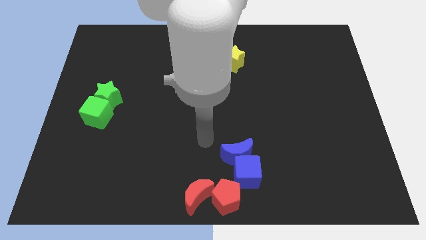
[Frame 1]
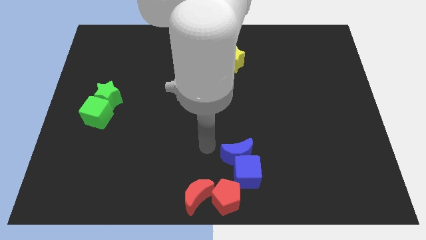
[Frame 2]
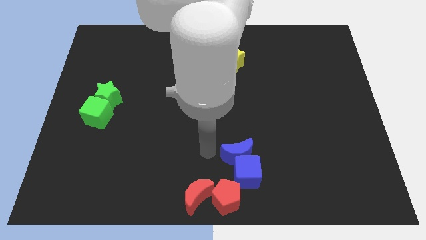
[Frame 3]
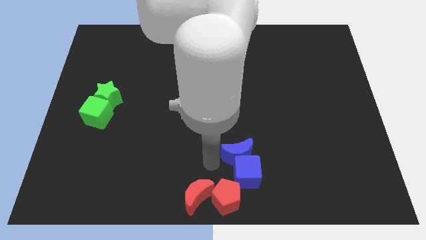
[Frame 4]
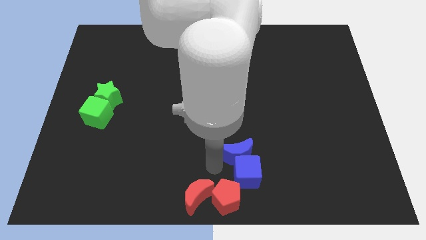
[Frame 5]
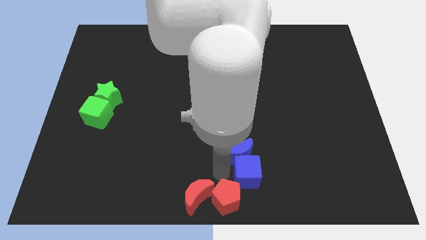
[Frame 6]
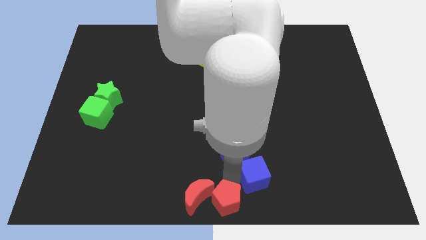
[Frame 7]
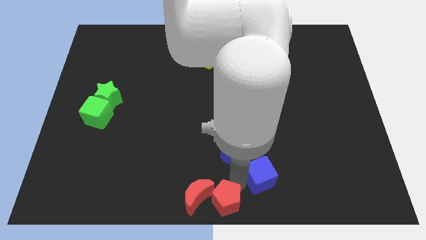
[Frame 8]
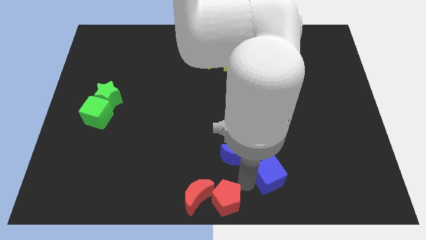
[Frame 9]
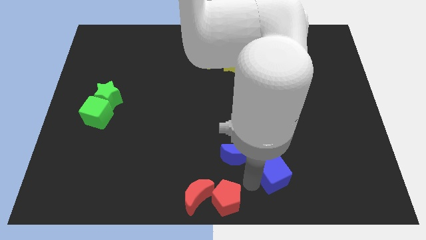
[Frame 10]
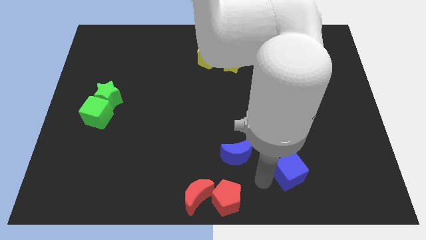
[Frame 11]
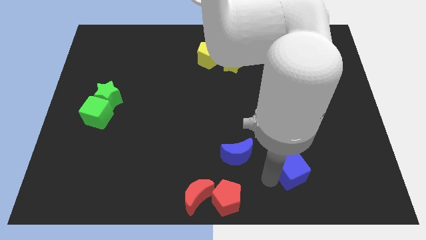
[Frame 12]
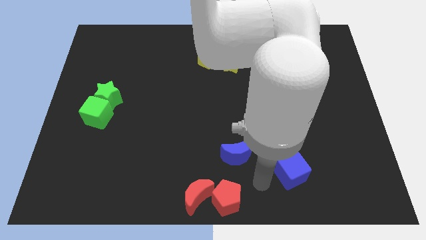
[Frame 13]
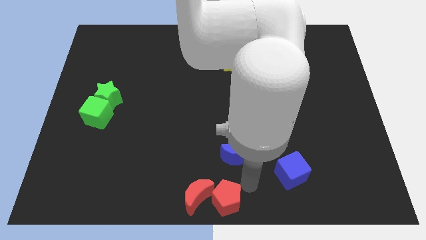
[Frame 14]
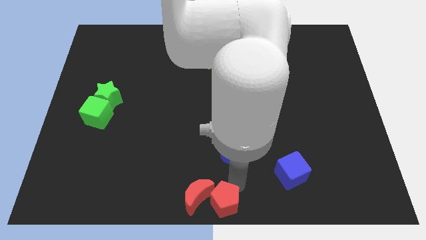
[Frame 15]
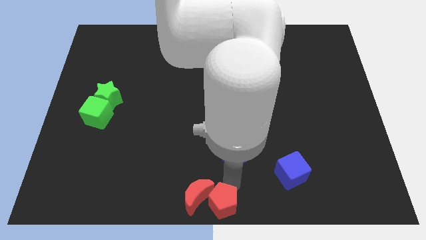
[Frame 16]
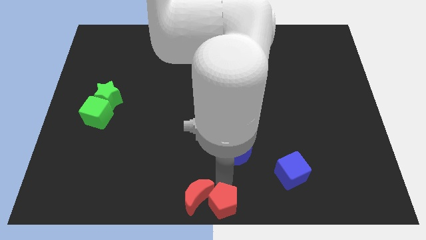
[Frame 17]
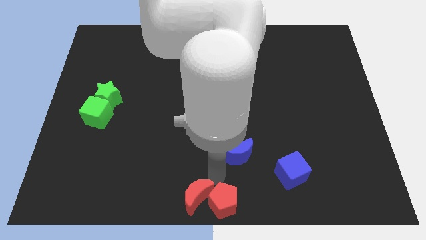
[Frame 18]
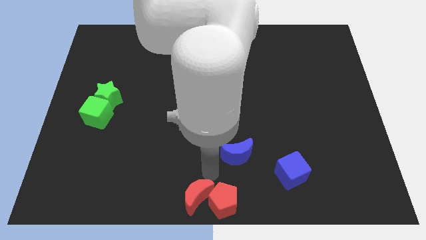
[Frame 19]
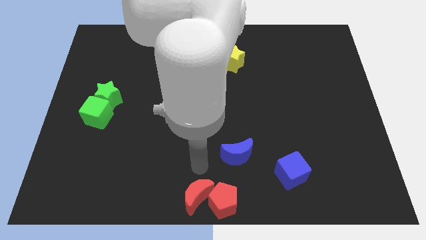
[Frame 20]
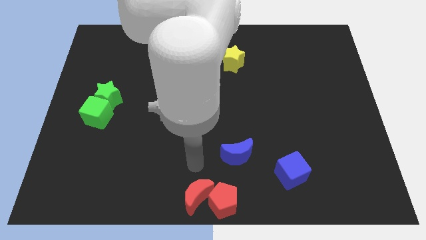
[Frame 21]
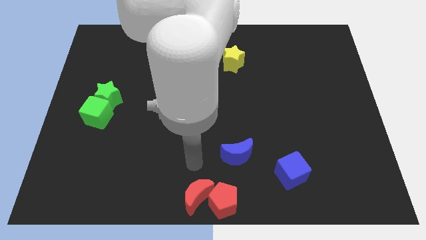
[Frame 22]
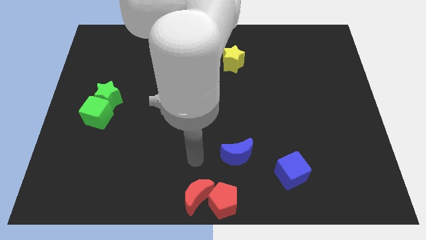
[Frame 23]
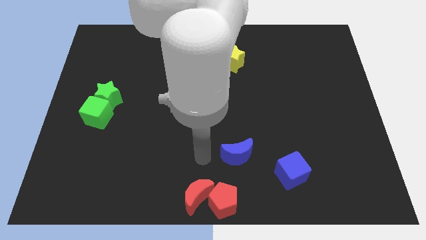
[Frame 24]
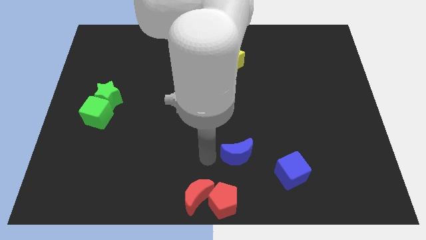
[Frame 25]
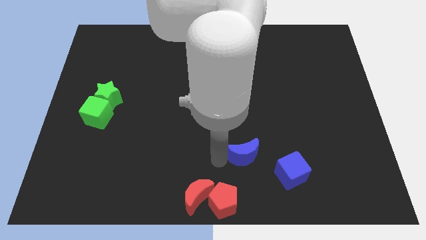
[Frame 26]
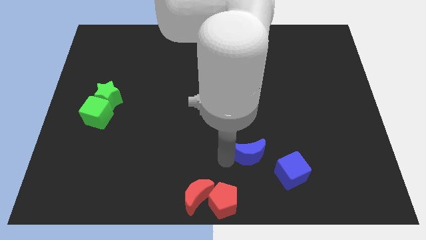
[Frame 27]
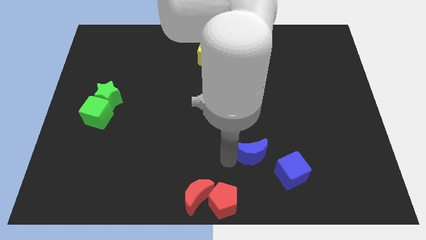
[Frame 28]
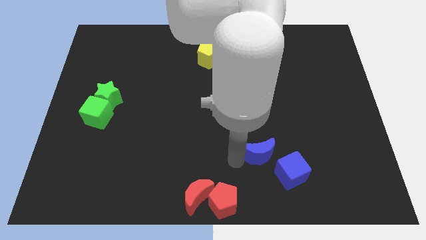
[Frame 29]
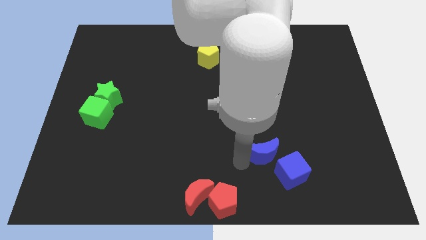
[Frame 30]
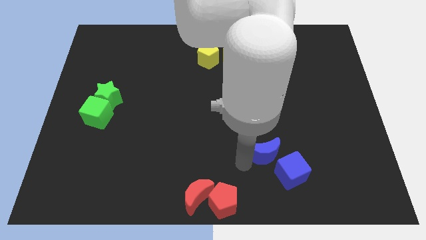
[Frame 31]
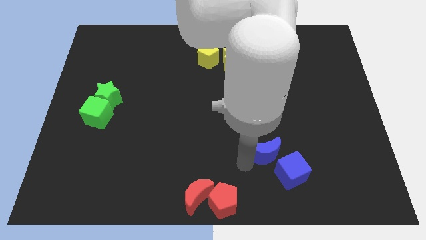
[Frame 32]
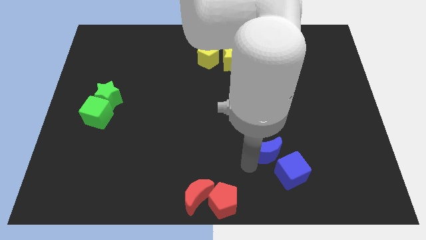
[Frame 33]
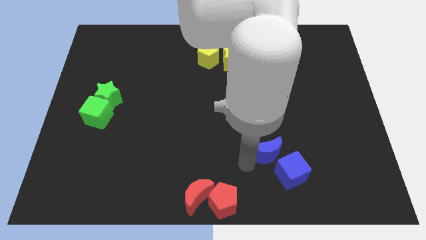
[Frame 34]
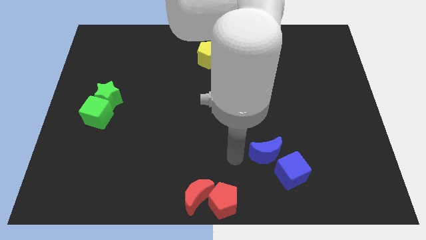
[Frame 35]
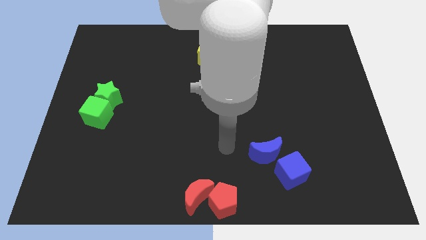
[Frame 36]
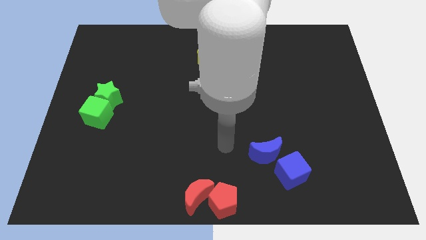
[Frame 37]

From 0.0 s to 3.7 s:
separate blue blocks away from red blocks

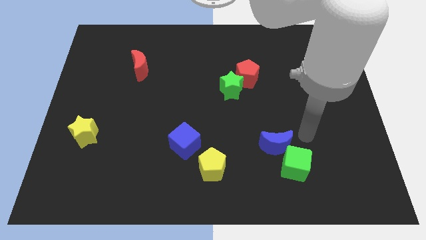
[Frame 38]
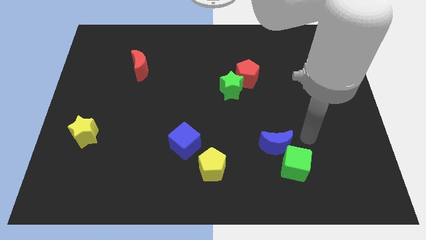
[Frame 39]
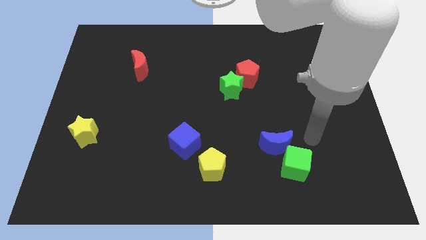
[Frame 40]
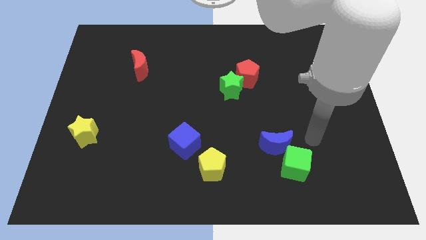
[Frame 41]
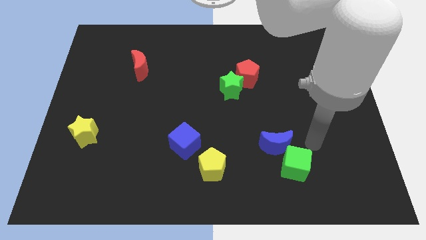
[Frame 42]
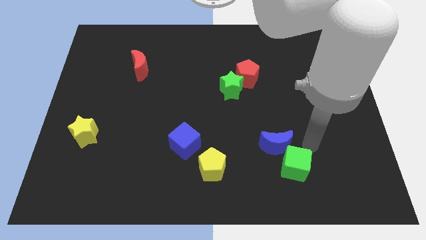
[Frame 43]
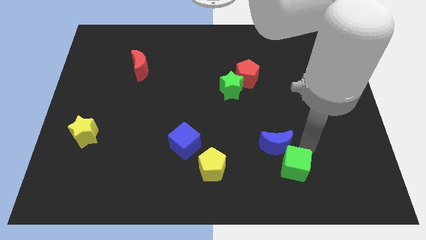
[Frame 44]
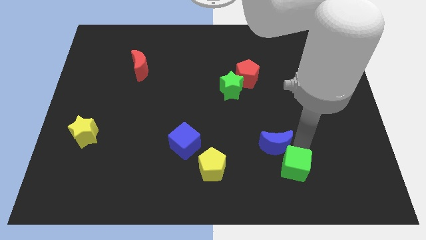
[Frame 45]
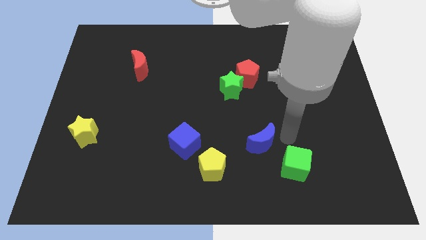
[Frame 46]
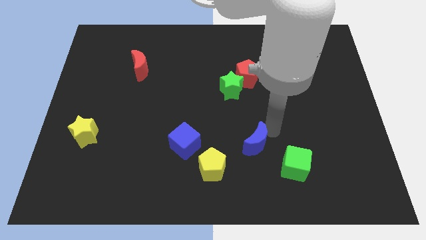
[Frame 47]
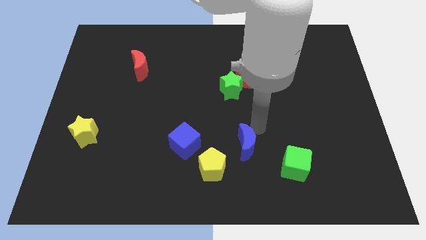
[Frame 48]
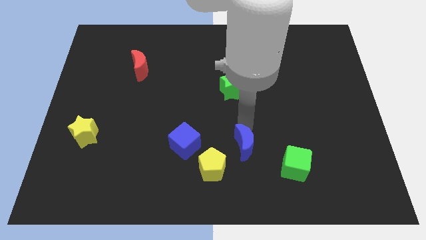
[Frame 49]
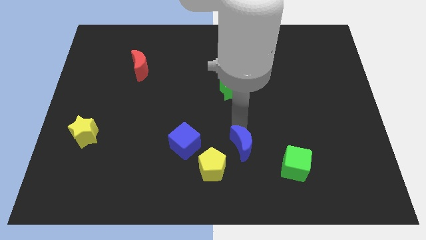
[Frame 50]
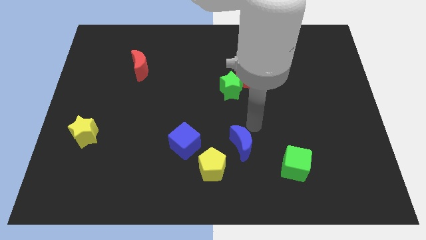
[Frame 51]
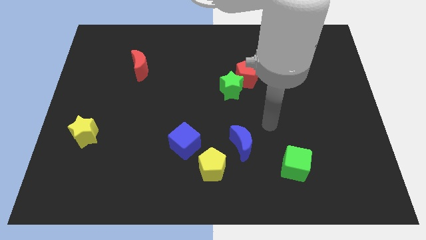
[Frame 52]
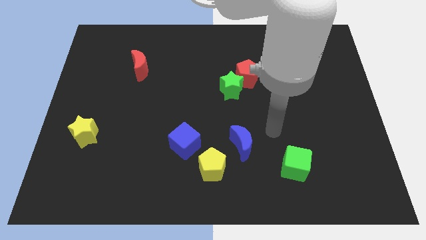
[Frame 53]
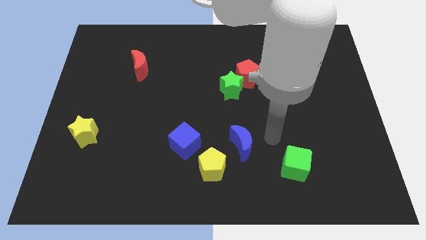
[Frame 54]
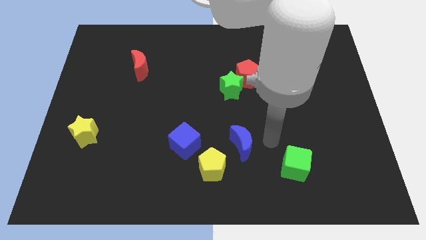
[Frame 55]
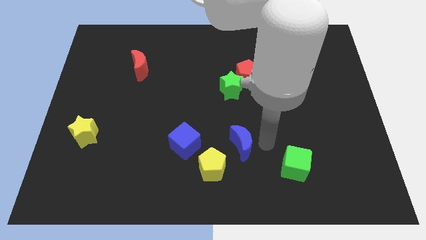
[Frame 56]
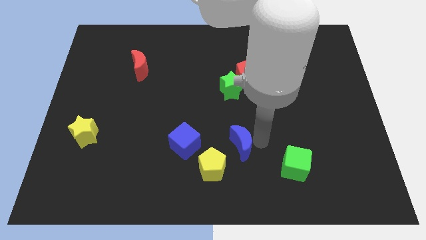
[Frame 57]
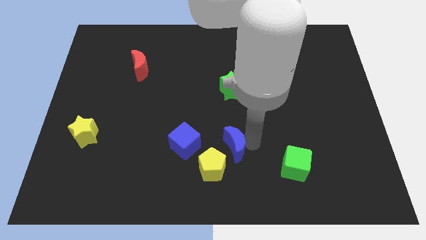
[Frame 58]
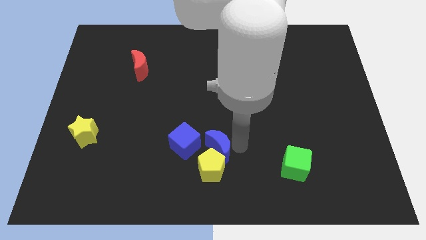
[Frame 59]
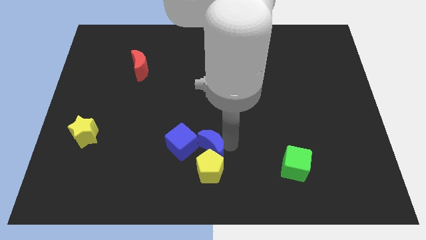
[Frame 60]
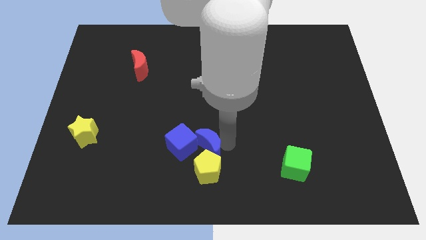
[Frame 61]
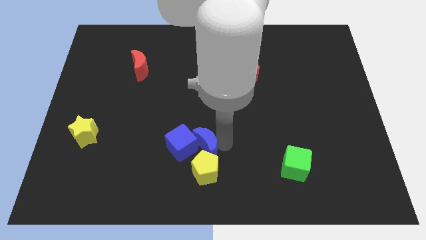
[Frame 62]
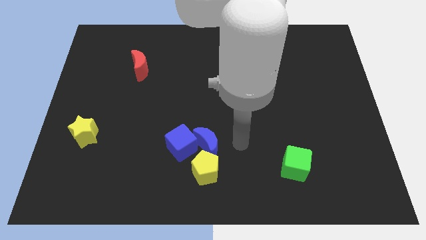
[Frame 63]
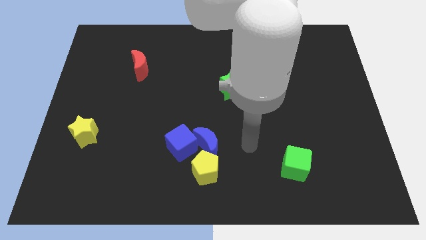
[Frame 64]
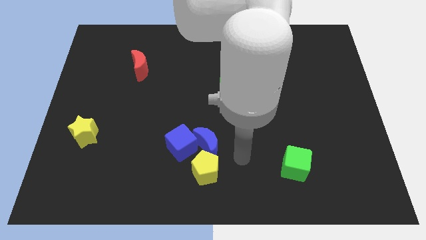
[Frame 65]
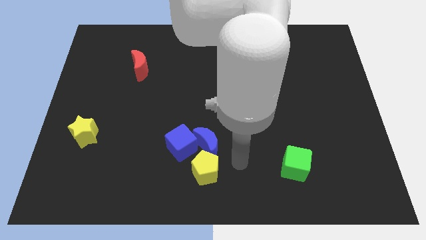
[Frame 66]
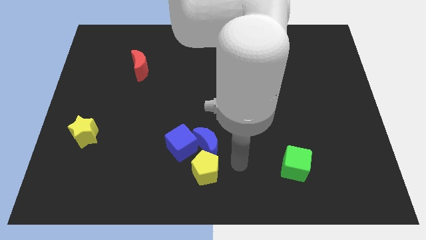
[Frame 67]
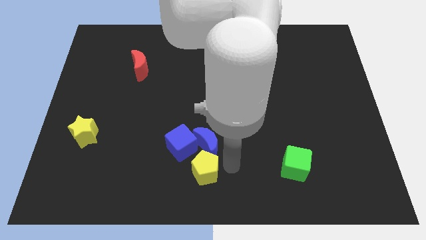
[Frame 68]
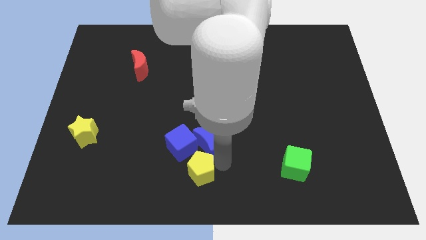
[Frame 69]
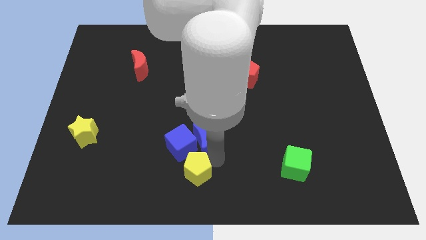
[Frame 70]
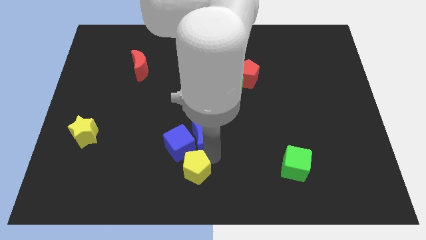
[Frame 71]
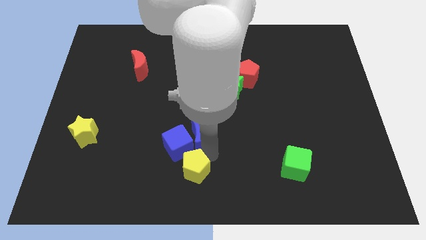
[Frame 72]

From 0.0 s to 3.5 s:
push the blue moon into the blue cube and yellow pentagon

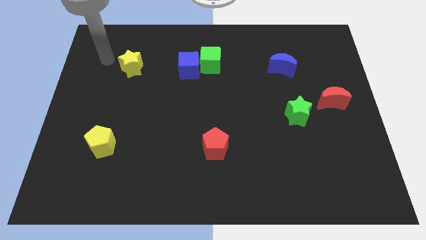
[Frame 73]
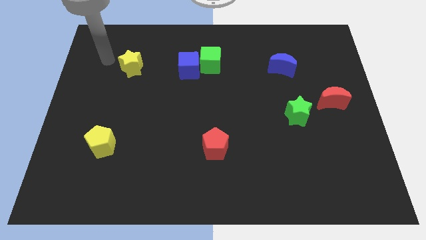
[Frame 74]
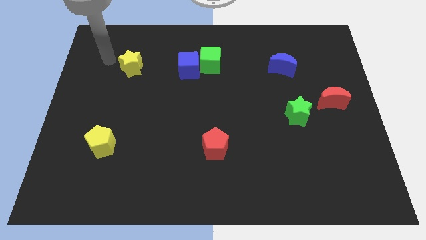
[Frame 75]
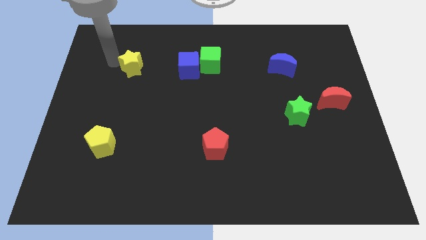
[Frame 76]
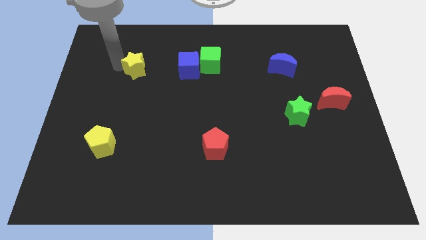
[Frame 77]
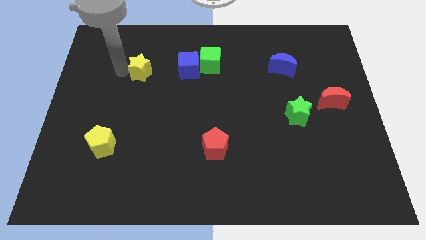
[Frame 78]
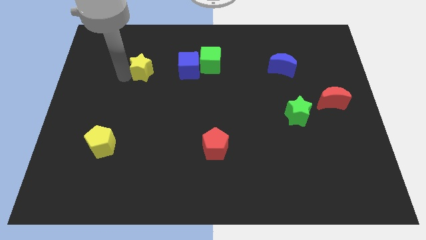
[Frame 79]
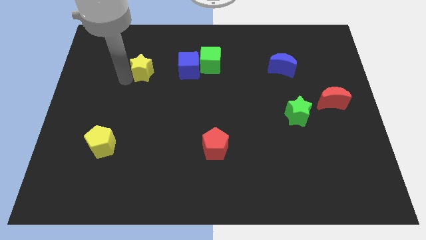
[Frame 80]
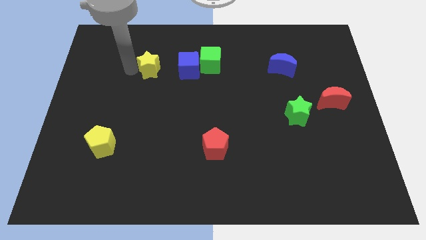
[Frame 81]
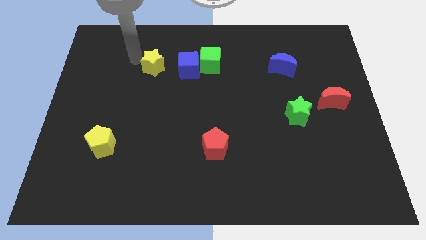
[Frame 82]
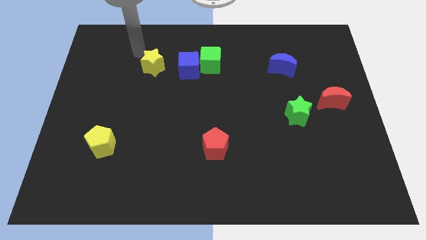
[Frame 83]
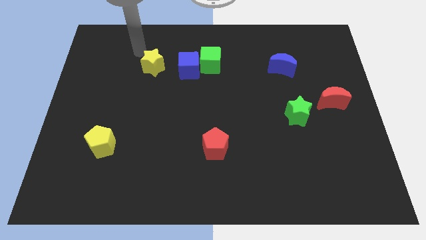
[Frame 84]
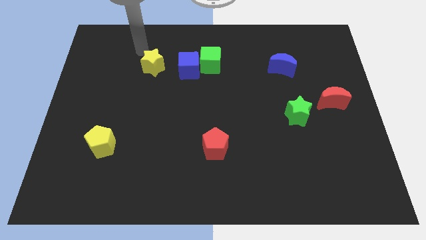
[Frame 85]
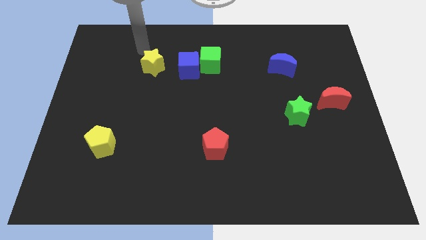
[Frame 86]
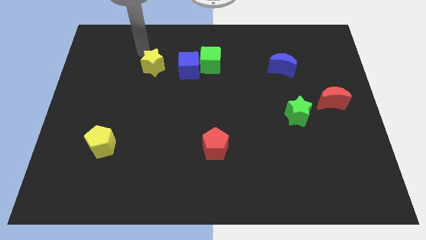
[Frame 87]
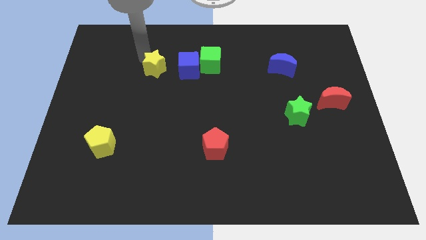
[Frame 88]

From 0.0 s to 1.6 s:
push the yellow star to the left of the blue cube

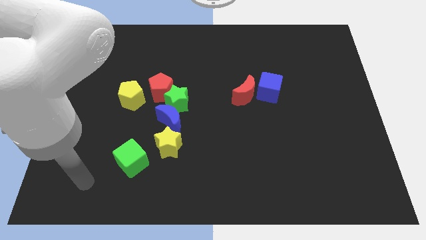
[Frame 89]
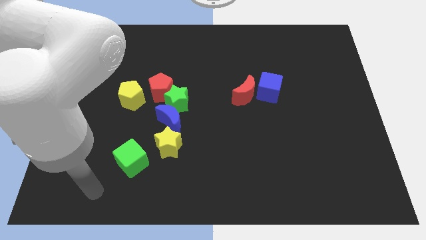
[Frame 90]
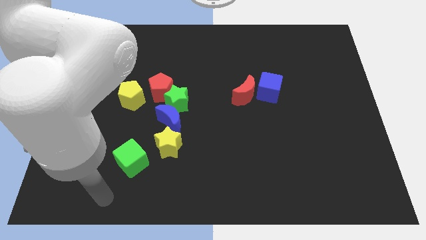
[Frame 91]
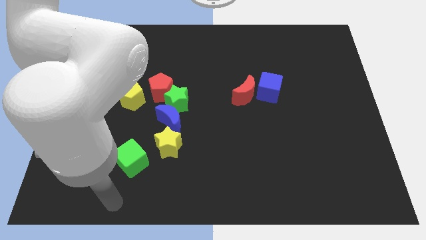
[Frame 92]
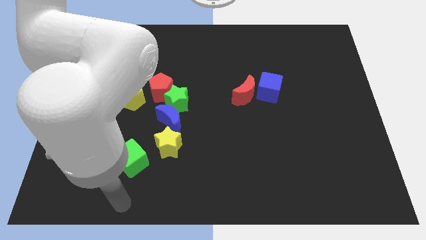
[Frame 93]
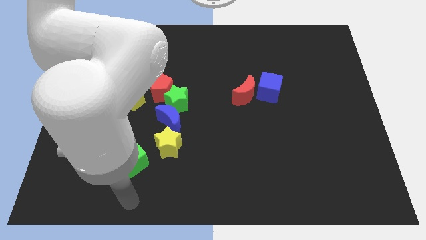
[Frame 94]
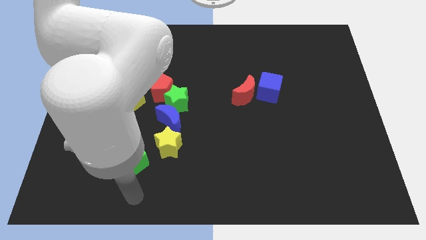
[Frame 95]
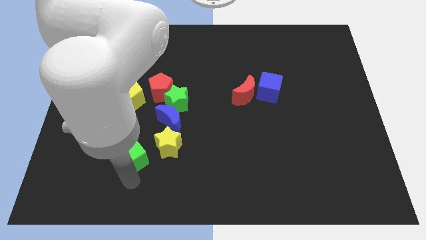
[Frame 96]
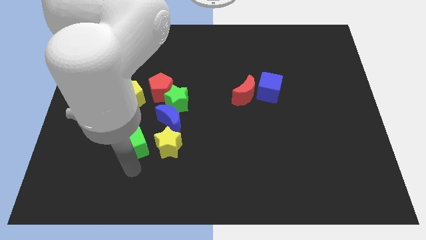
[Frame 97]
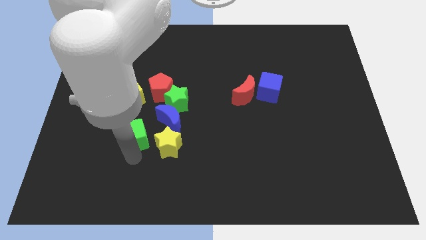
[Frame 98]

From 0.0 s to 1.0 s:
place the green cube left to the yellow star
